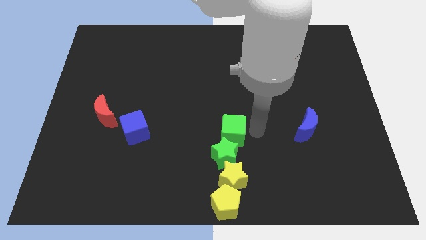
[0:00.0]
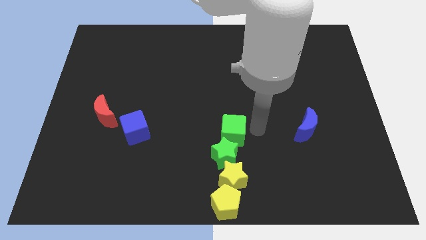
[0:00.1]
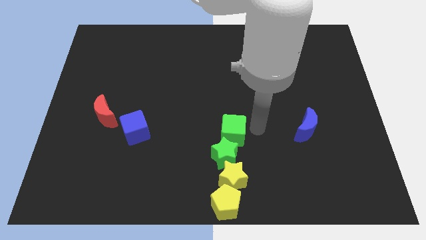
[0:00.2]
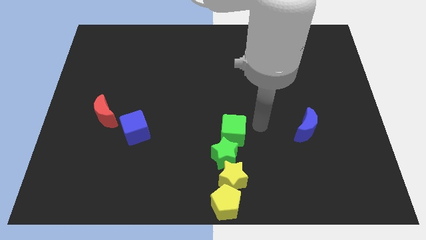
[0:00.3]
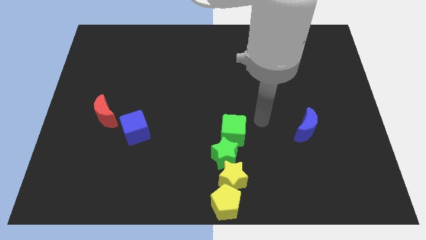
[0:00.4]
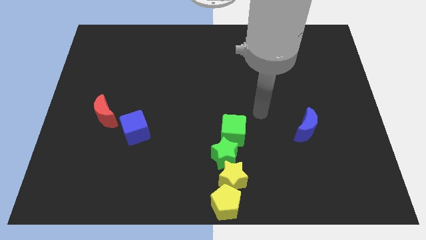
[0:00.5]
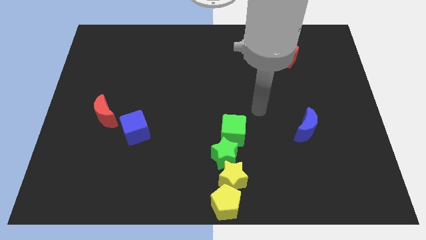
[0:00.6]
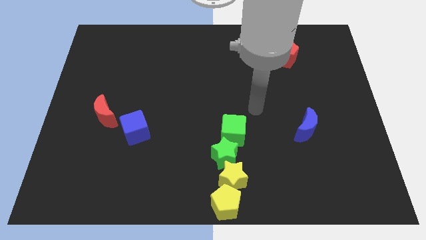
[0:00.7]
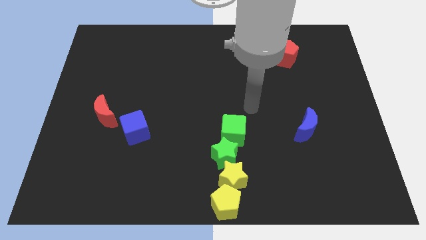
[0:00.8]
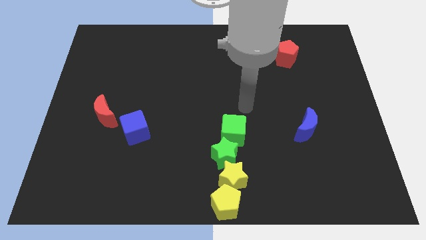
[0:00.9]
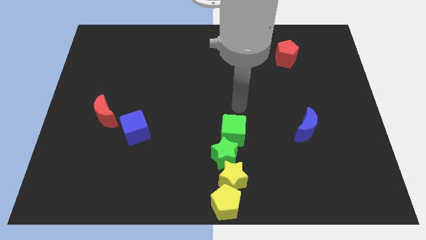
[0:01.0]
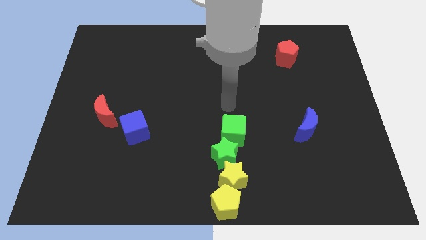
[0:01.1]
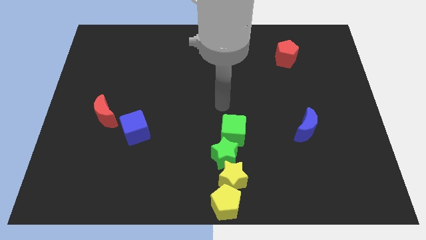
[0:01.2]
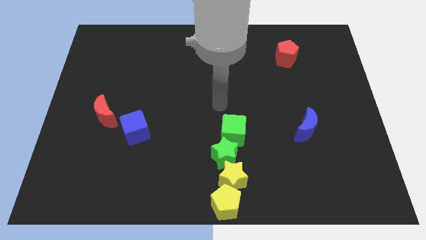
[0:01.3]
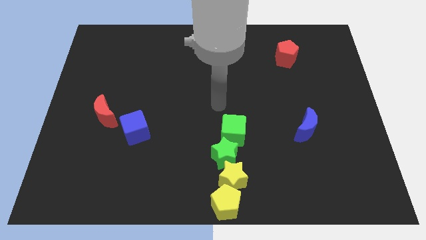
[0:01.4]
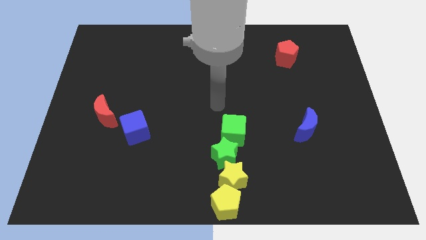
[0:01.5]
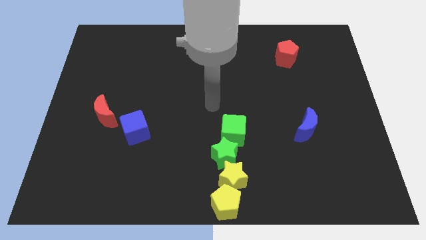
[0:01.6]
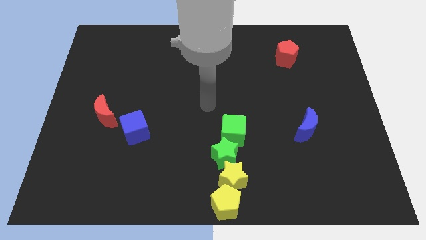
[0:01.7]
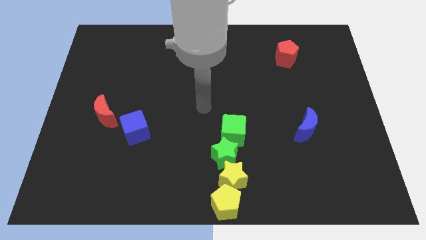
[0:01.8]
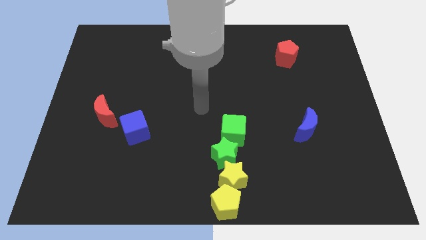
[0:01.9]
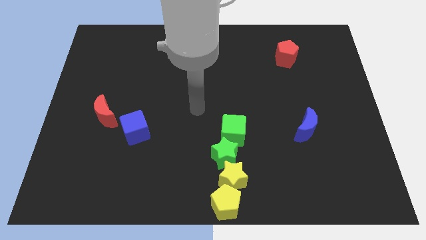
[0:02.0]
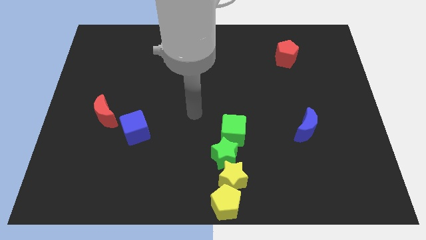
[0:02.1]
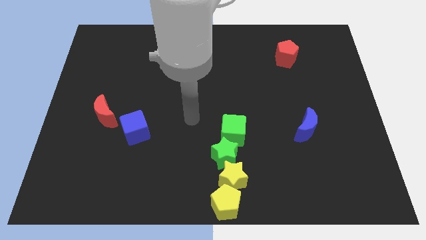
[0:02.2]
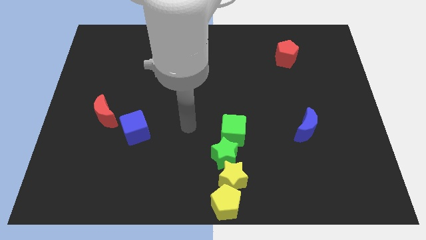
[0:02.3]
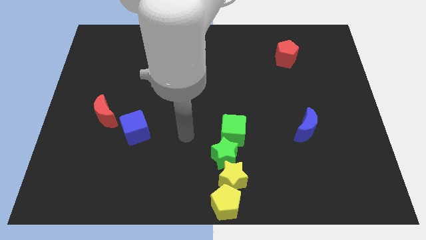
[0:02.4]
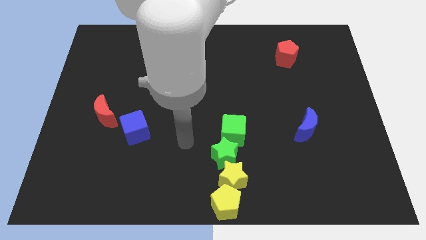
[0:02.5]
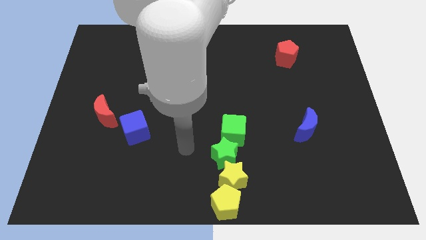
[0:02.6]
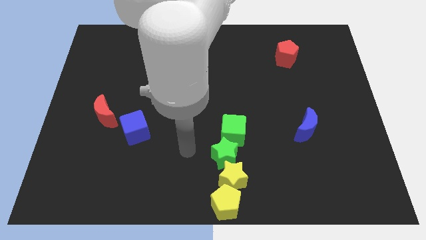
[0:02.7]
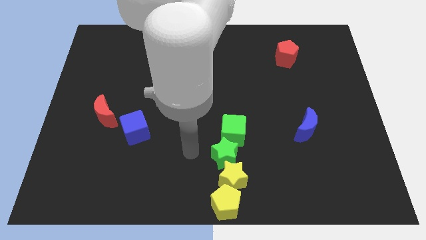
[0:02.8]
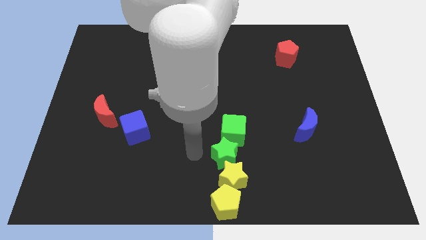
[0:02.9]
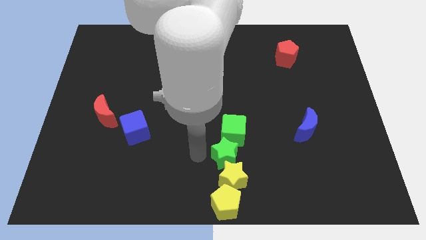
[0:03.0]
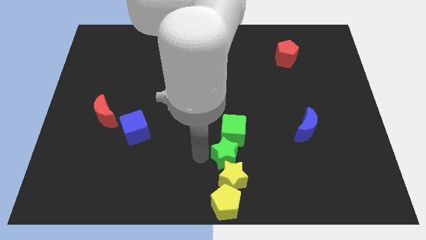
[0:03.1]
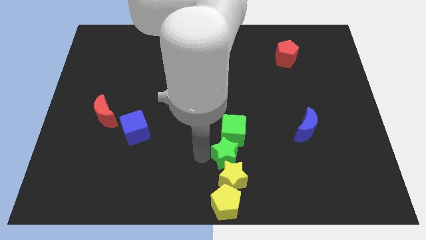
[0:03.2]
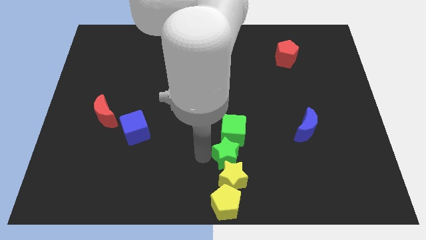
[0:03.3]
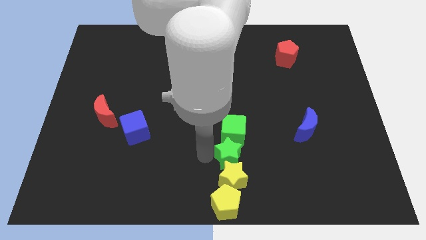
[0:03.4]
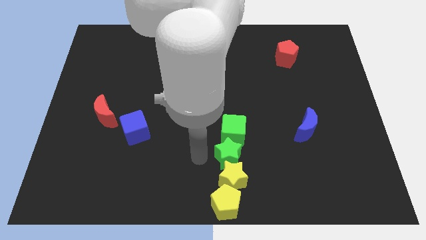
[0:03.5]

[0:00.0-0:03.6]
push the green star slightly to the right side of the table

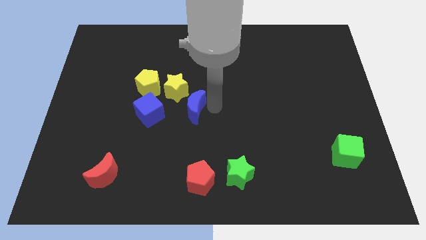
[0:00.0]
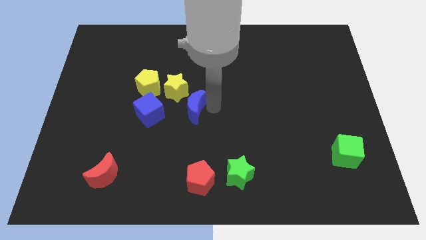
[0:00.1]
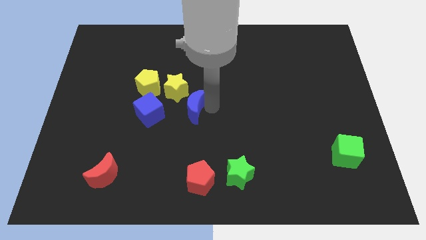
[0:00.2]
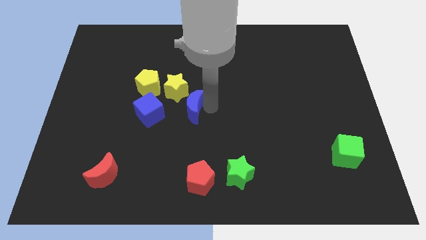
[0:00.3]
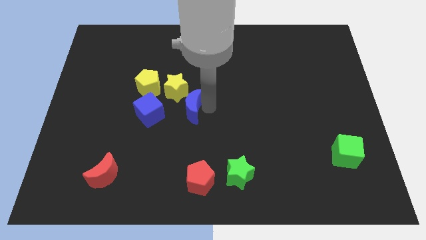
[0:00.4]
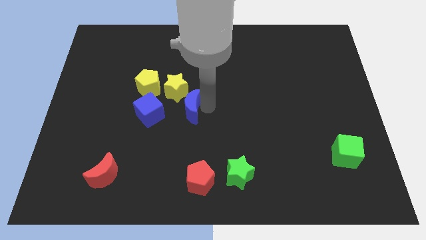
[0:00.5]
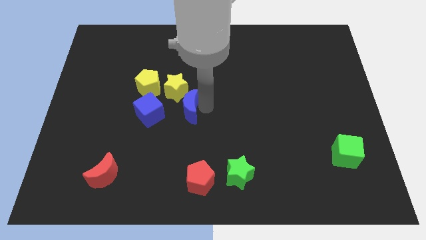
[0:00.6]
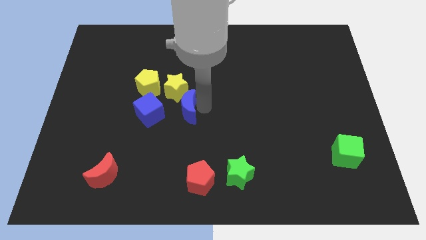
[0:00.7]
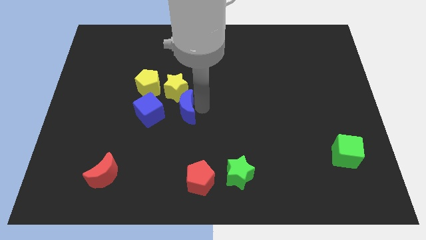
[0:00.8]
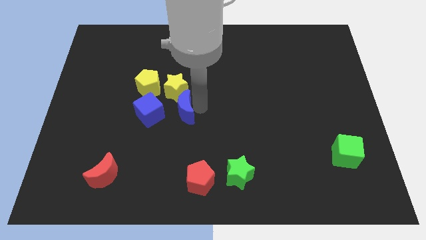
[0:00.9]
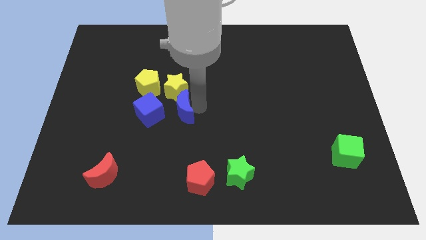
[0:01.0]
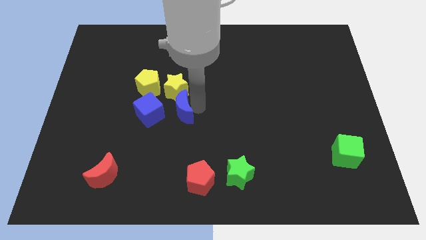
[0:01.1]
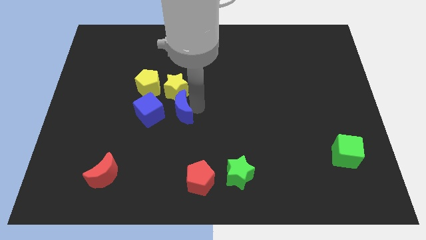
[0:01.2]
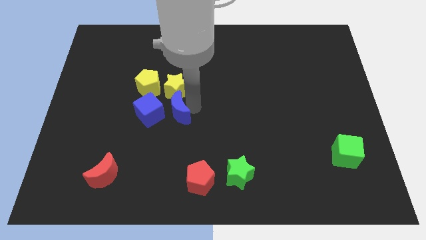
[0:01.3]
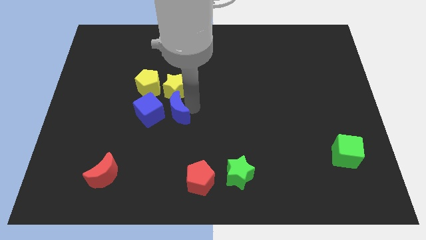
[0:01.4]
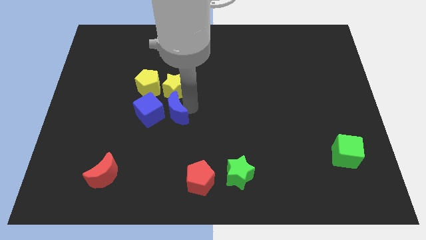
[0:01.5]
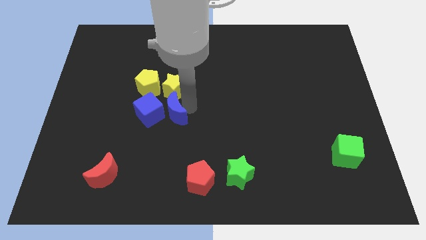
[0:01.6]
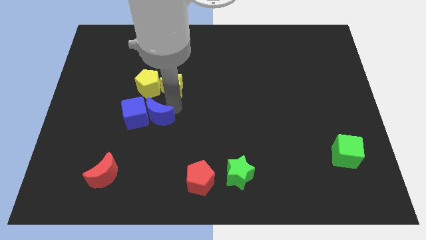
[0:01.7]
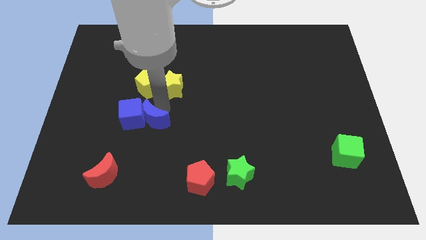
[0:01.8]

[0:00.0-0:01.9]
move the blue crescent into the blue cube

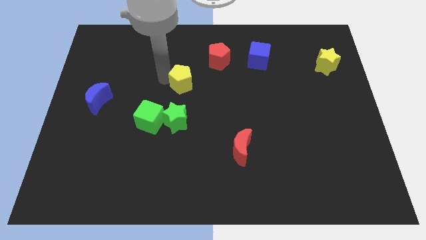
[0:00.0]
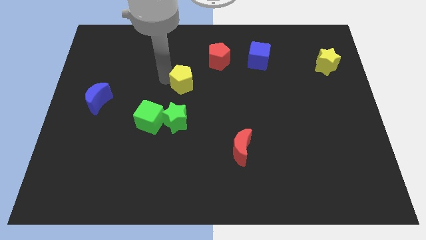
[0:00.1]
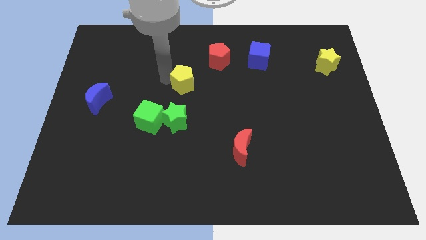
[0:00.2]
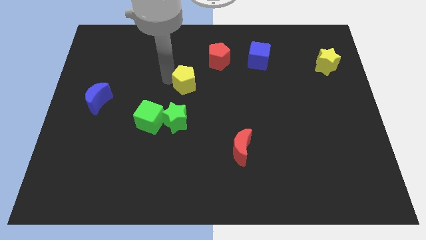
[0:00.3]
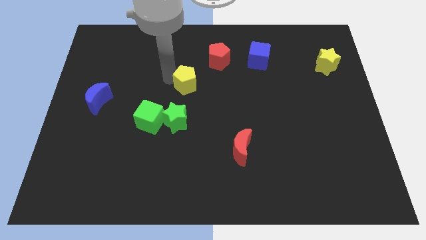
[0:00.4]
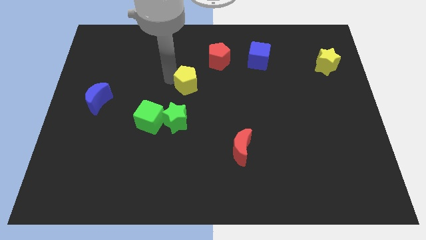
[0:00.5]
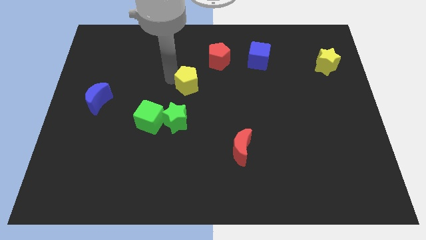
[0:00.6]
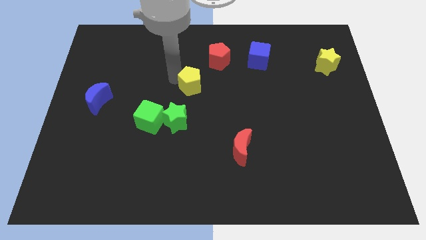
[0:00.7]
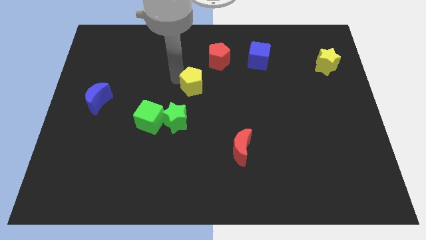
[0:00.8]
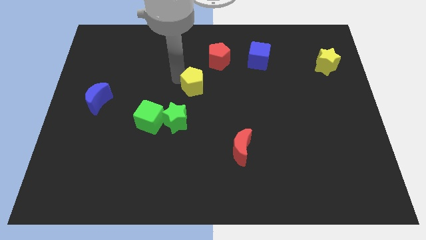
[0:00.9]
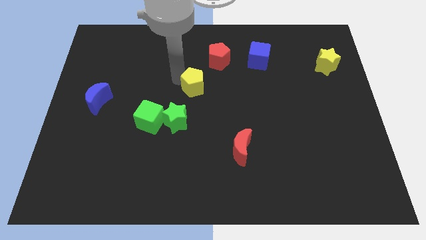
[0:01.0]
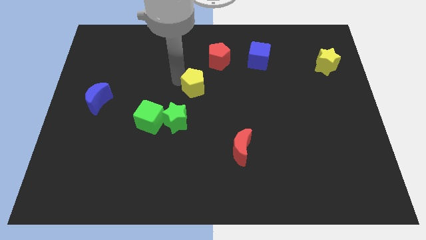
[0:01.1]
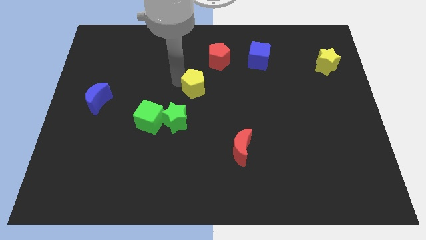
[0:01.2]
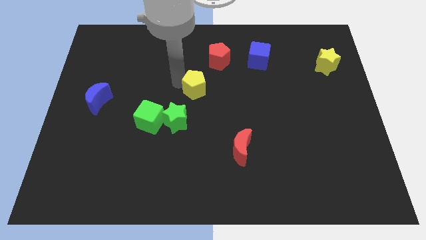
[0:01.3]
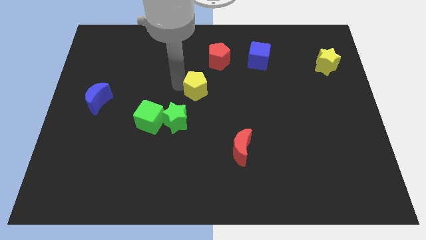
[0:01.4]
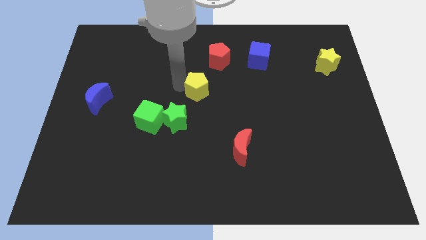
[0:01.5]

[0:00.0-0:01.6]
put the yellow pentagon in between the red pentagon and green star

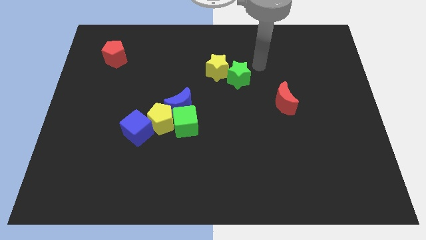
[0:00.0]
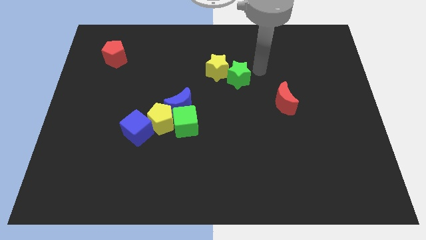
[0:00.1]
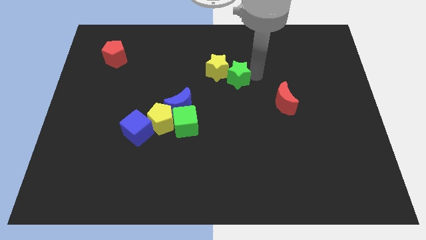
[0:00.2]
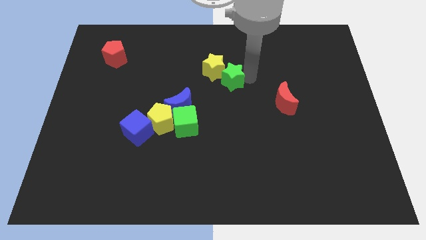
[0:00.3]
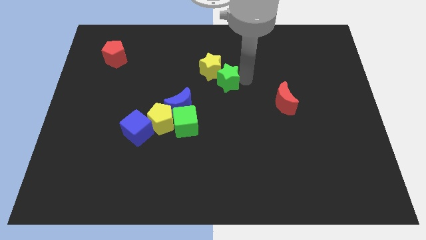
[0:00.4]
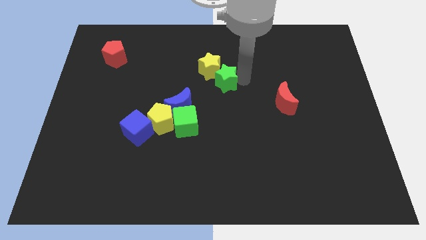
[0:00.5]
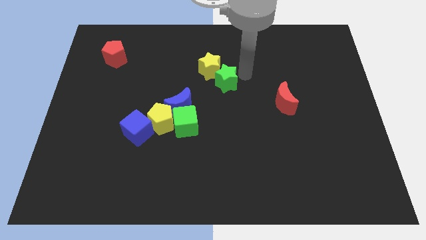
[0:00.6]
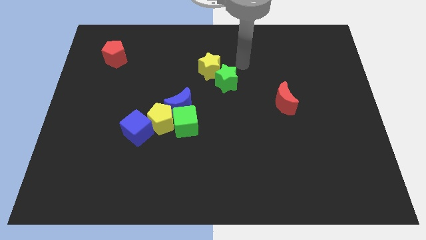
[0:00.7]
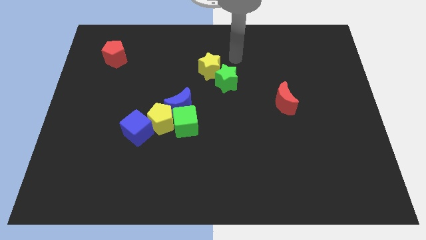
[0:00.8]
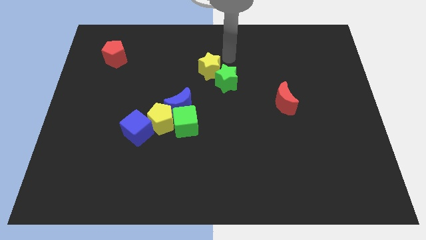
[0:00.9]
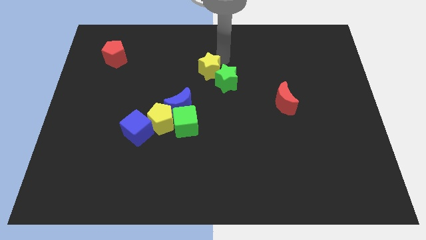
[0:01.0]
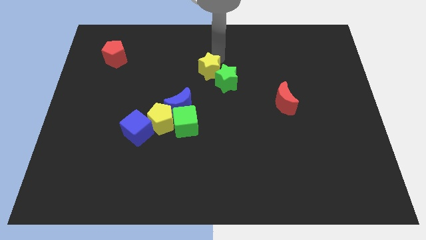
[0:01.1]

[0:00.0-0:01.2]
touch the top side of the yellow star

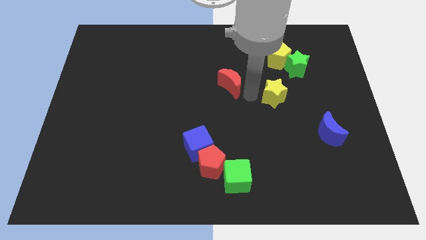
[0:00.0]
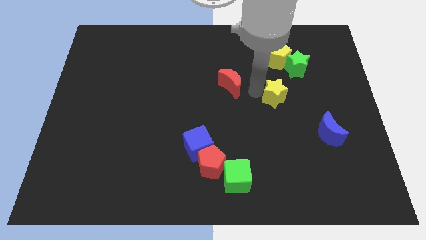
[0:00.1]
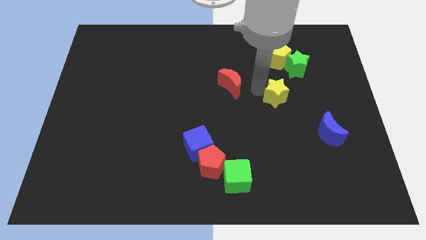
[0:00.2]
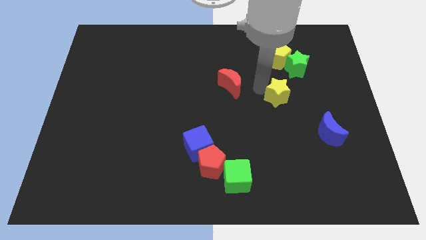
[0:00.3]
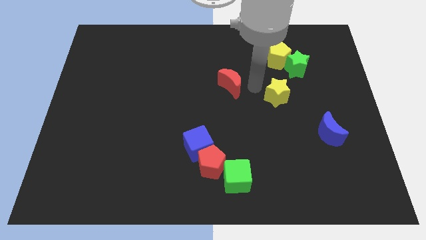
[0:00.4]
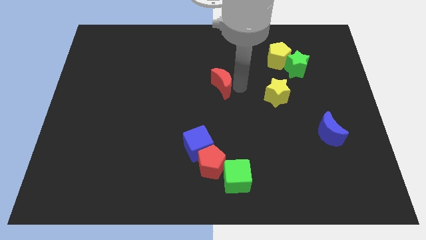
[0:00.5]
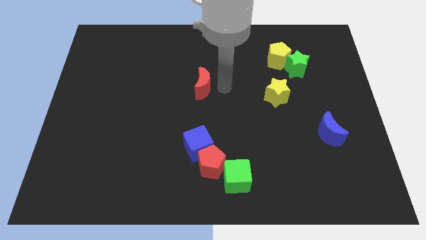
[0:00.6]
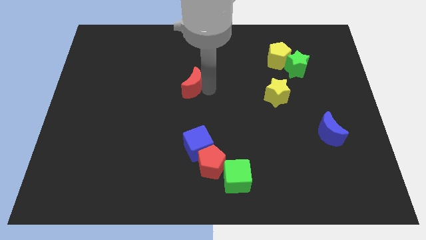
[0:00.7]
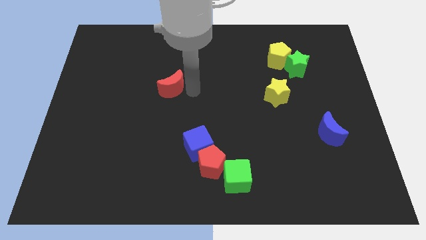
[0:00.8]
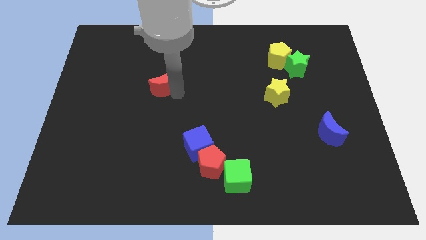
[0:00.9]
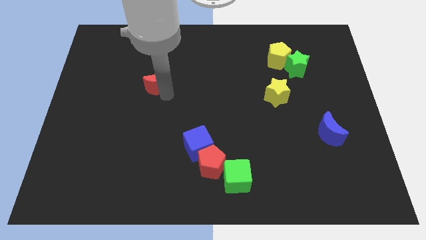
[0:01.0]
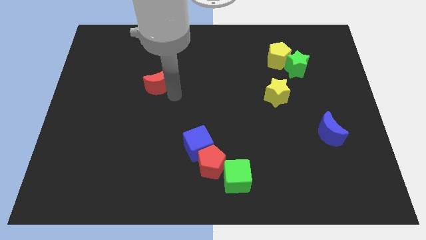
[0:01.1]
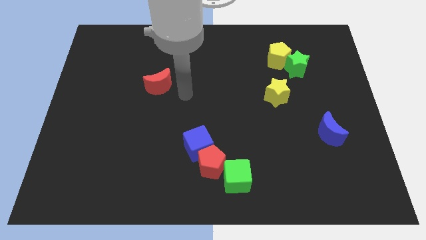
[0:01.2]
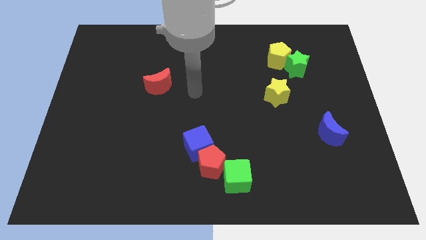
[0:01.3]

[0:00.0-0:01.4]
slide the red moon to the left side
